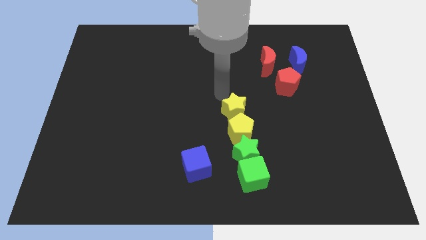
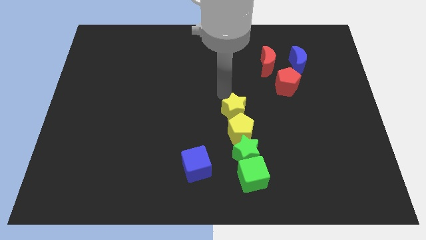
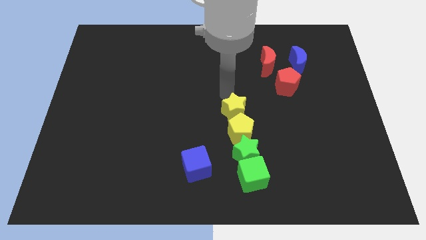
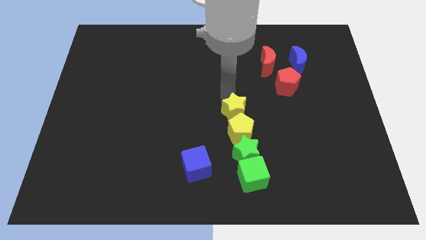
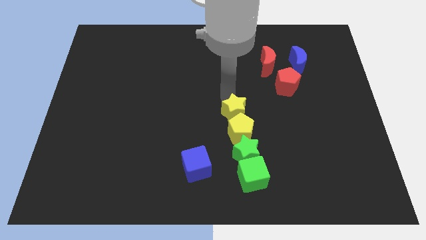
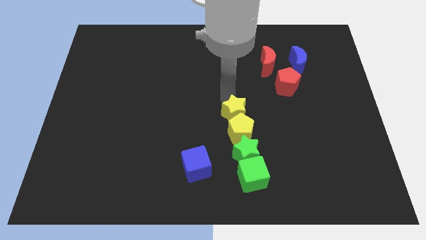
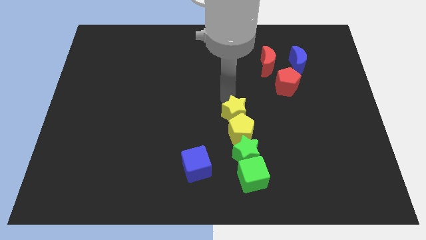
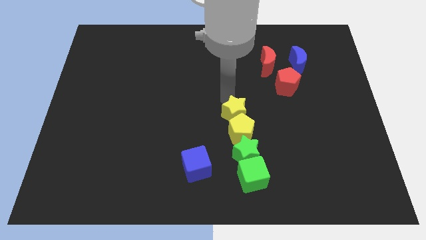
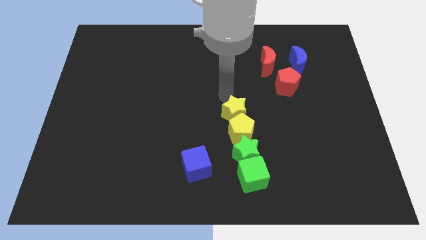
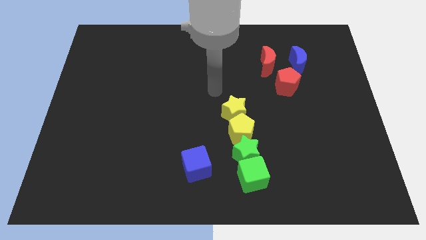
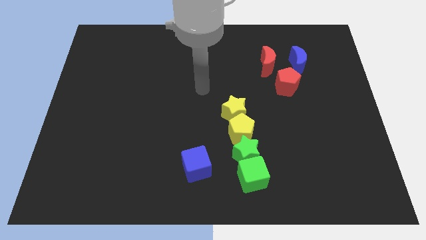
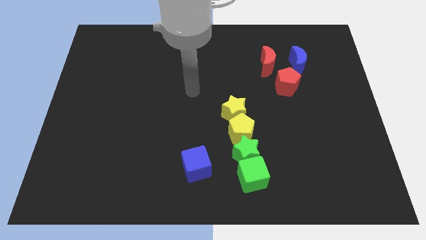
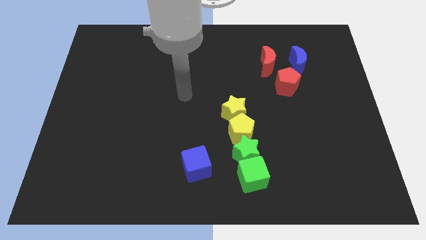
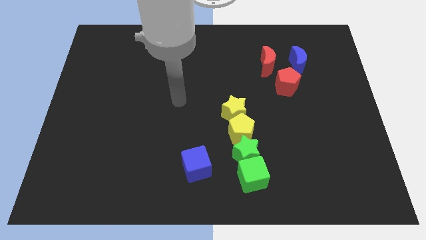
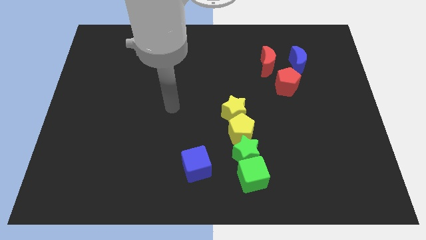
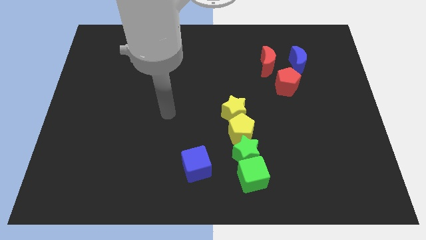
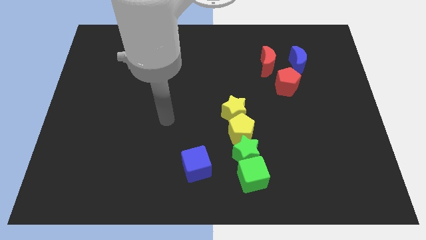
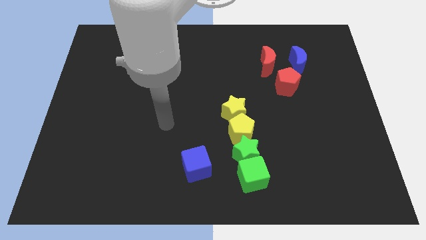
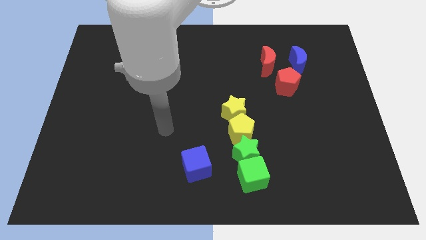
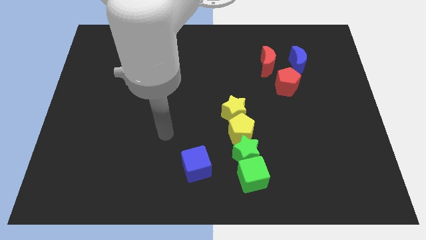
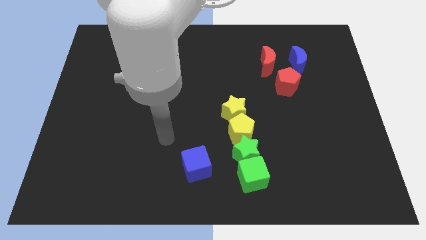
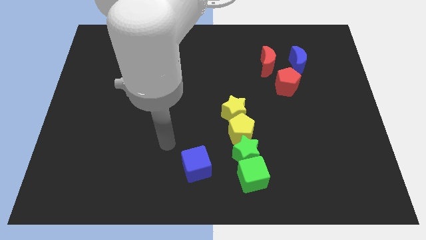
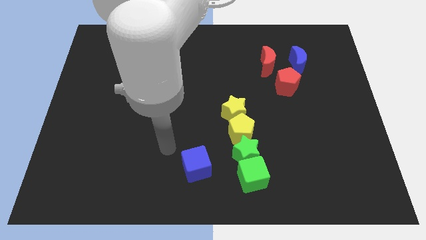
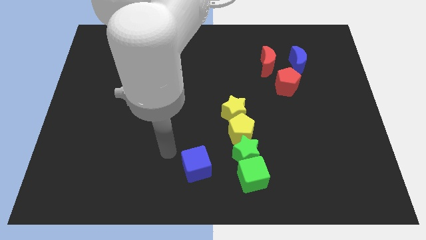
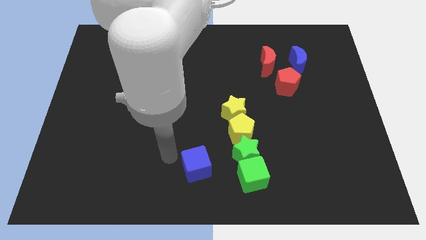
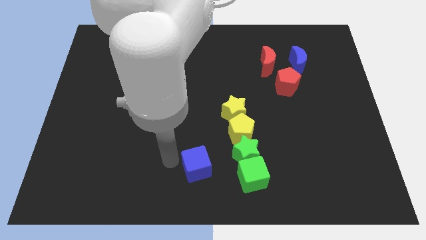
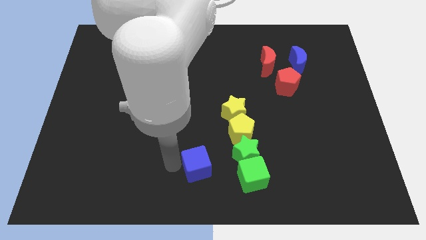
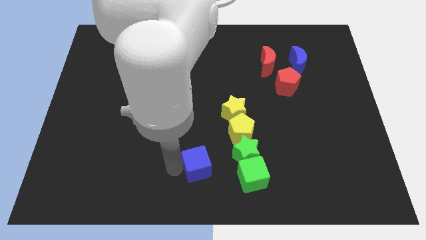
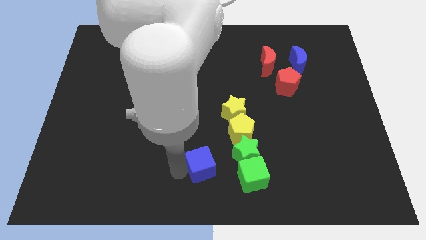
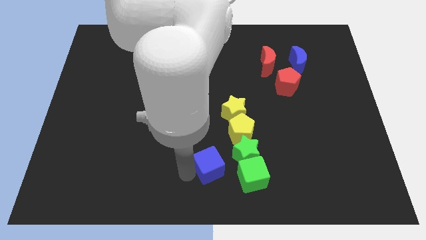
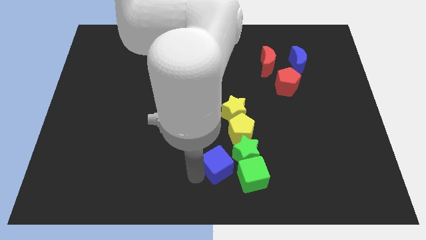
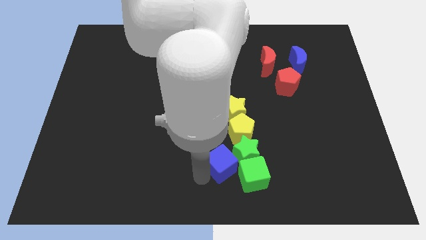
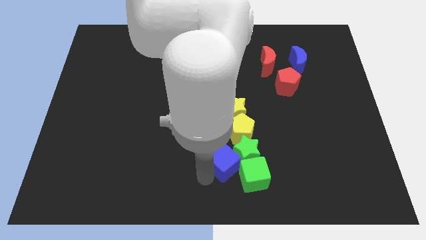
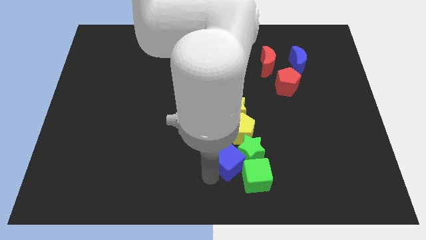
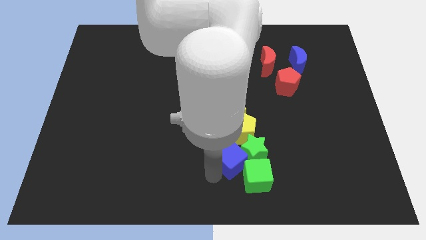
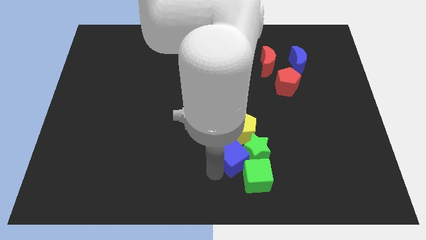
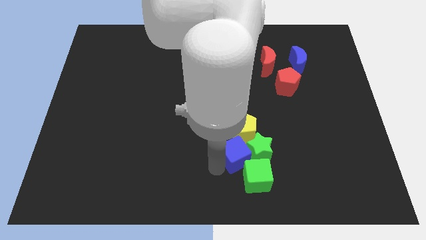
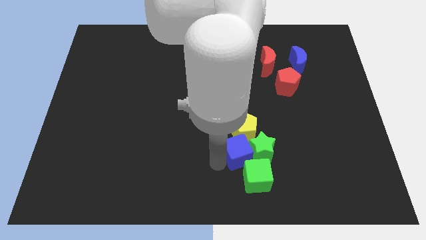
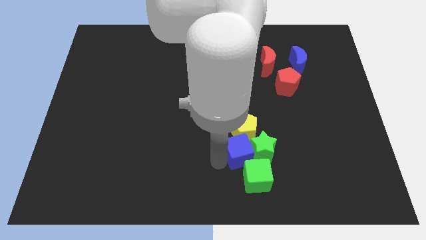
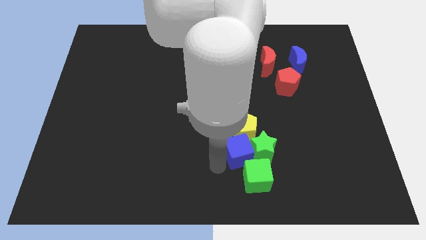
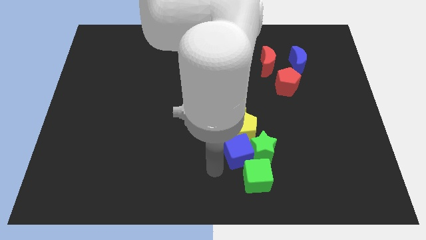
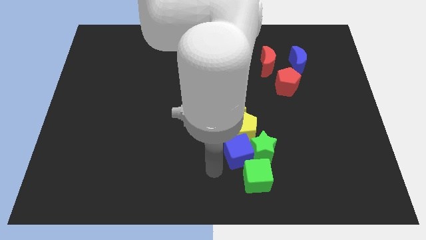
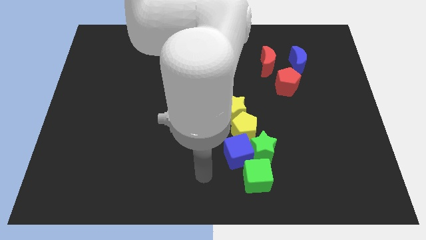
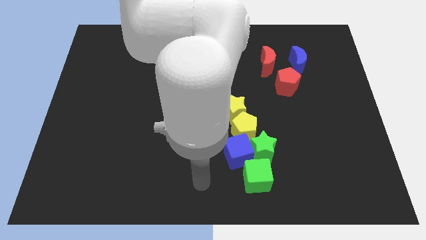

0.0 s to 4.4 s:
push the blue moon into the green star

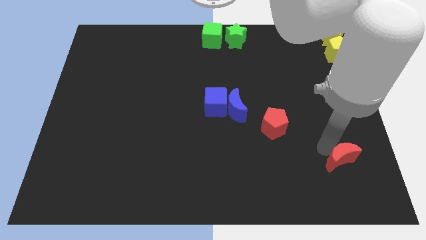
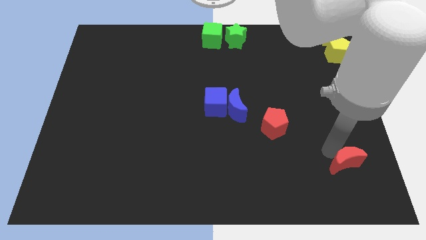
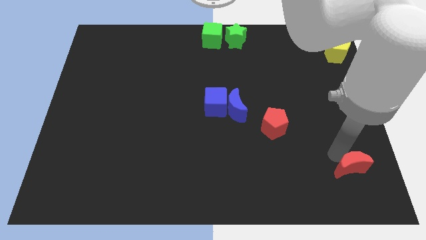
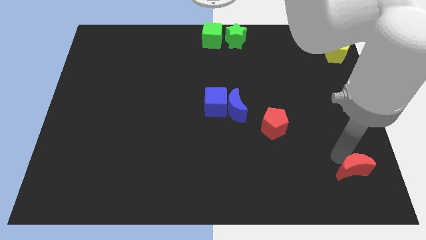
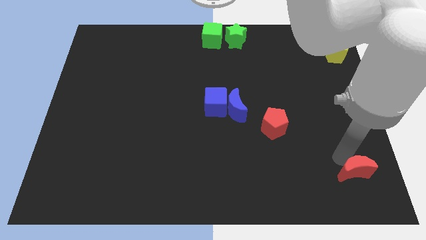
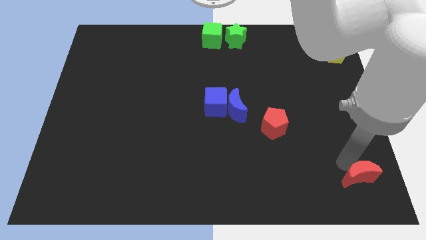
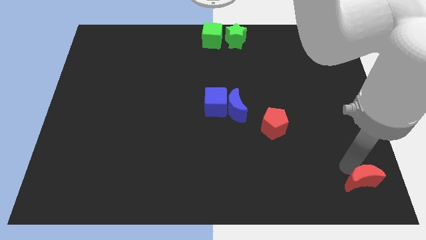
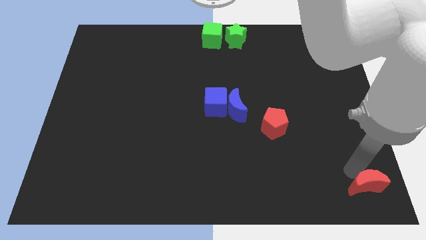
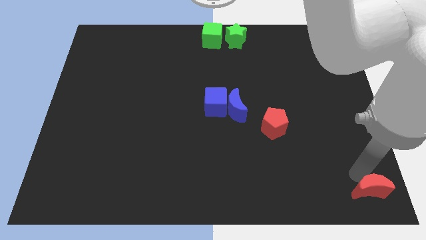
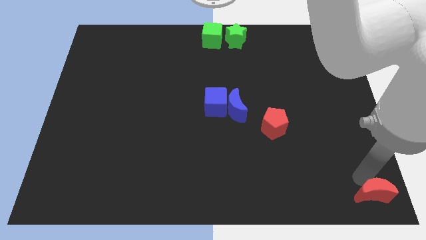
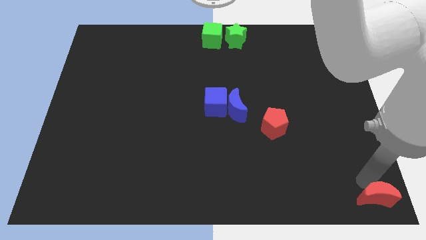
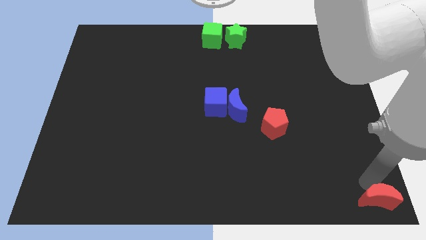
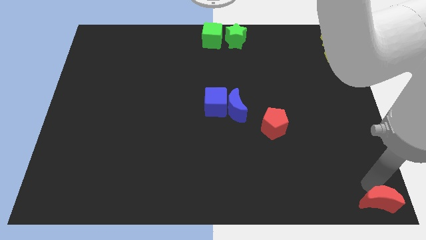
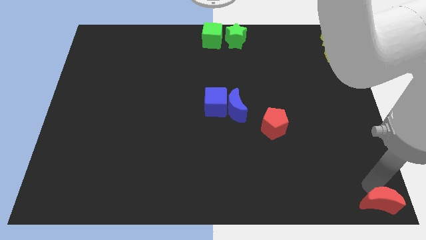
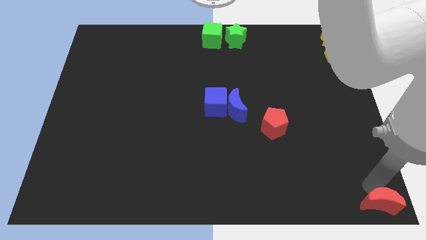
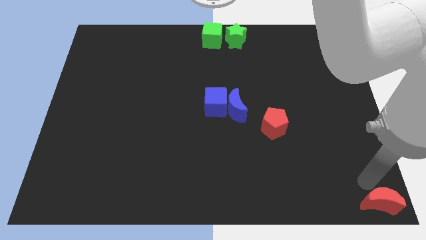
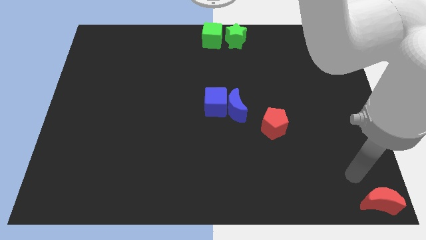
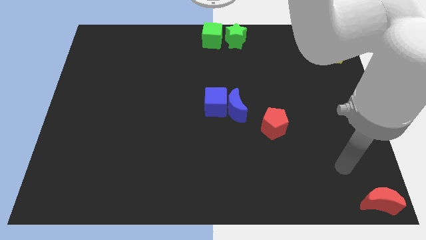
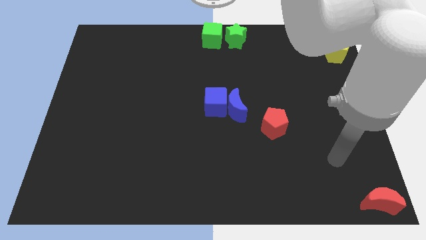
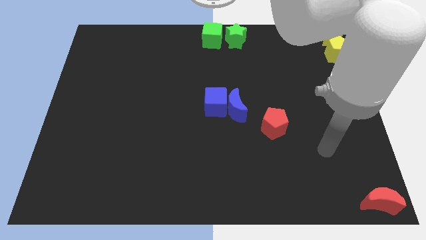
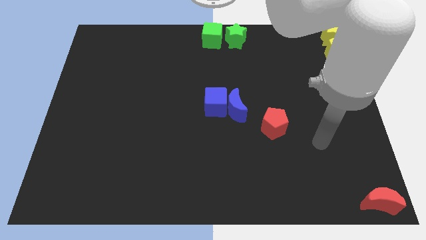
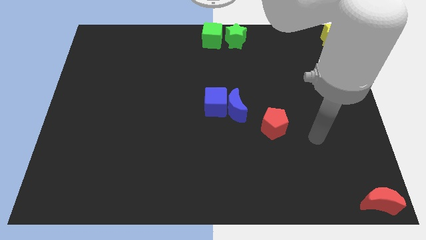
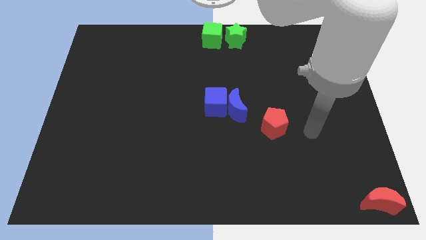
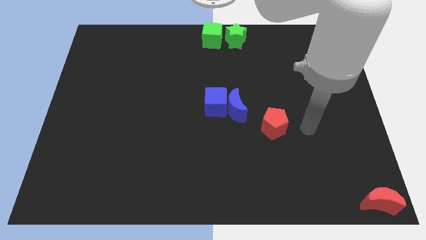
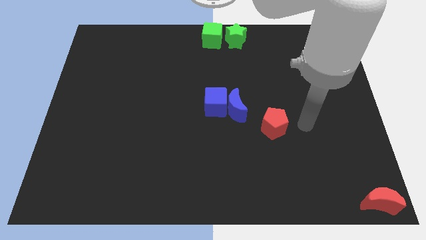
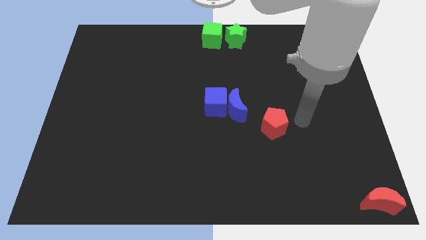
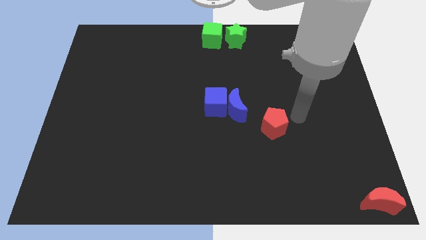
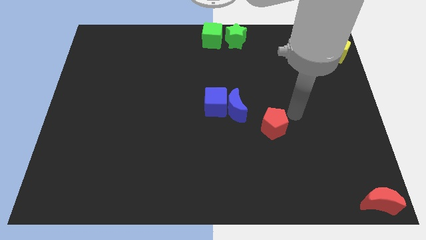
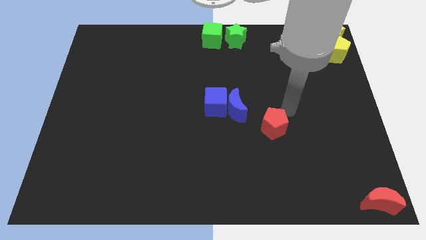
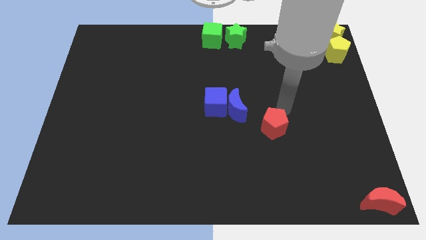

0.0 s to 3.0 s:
place the red moon at the bottom right corner of the board

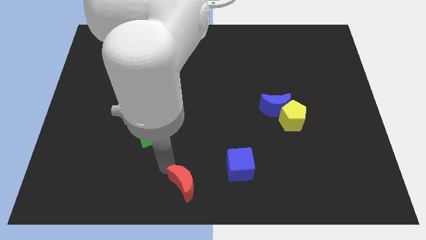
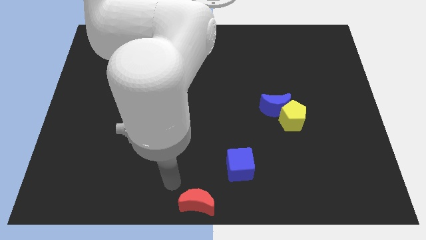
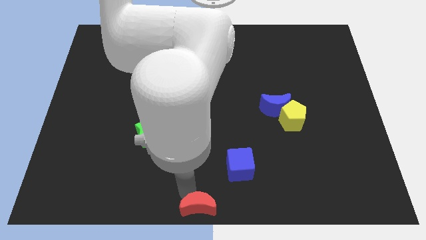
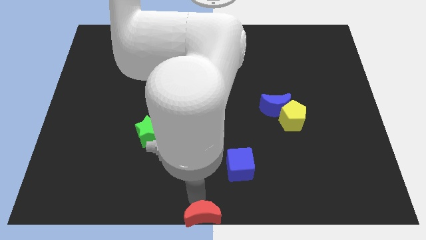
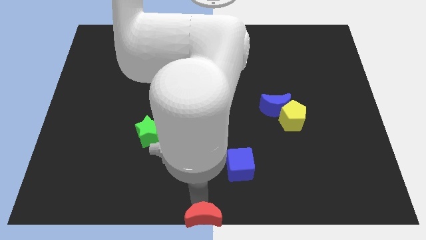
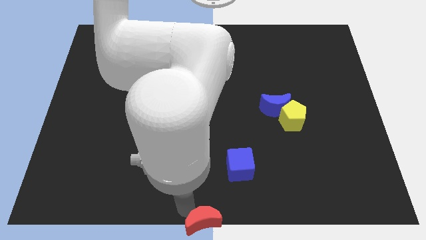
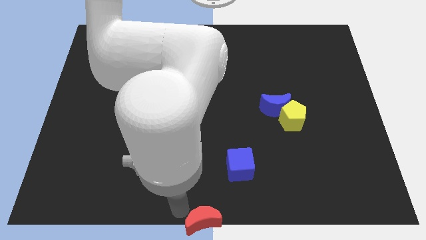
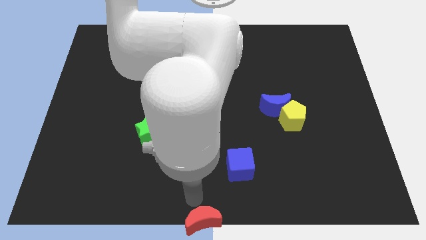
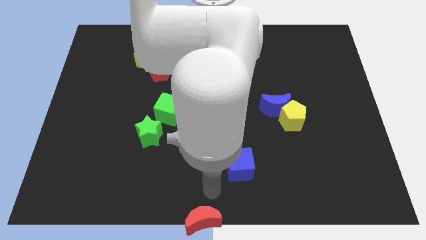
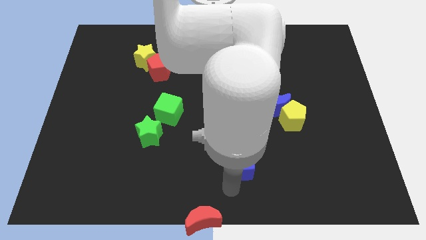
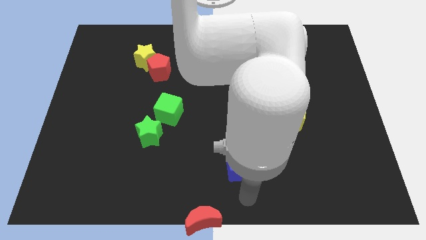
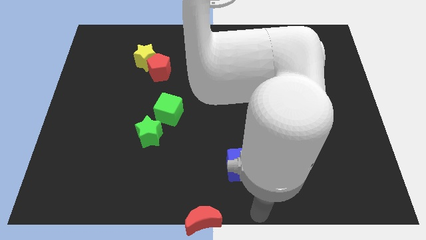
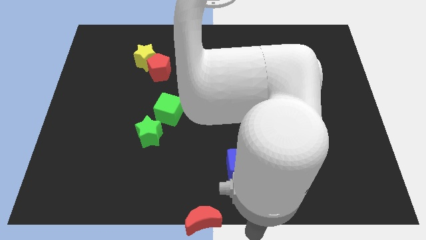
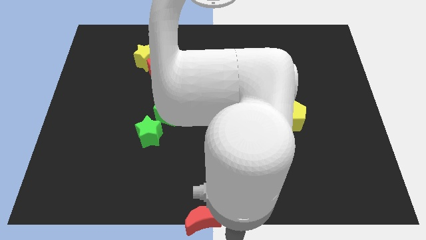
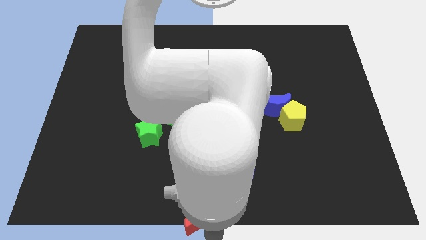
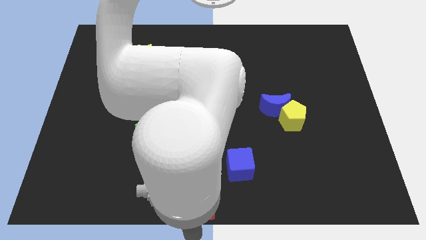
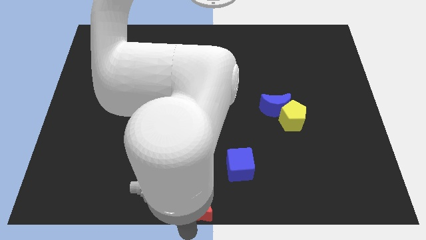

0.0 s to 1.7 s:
move the red crescent at the bottom center
